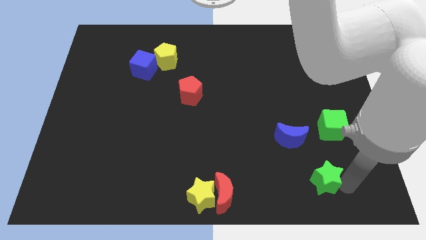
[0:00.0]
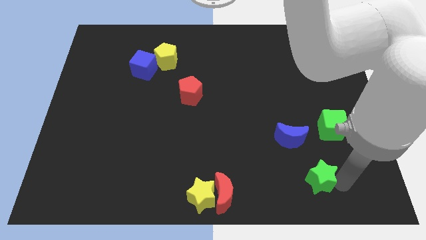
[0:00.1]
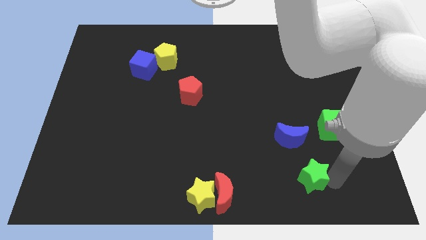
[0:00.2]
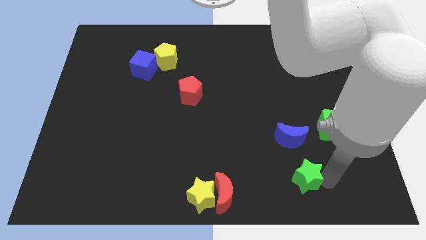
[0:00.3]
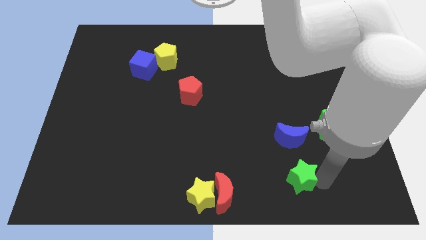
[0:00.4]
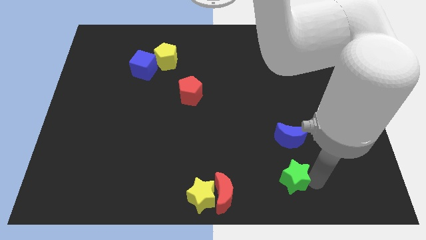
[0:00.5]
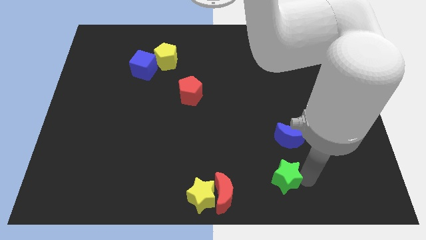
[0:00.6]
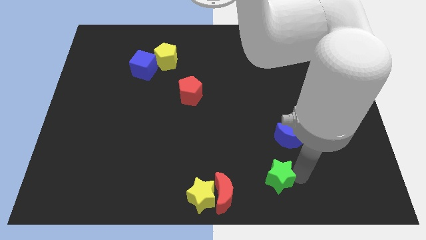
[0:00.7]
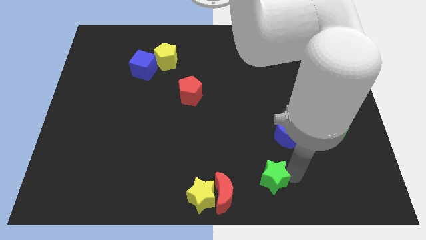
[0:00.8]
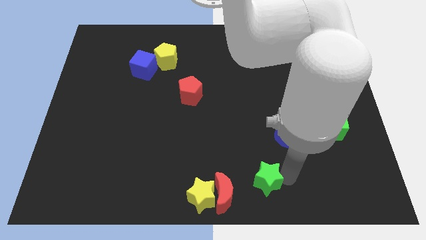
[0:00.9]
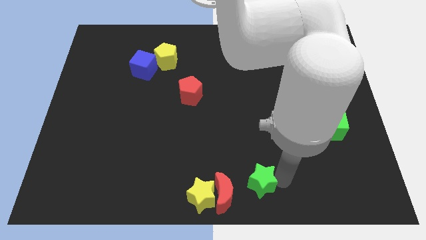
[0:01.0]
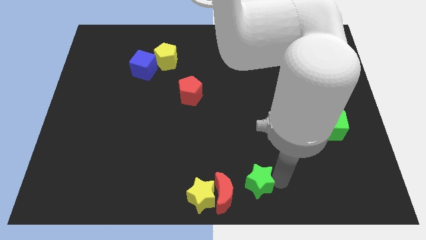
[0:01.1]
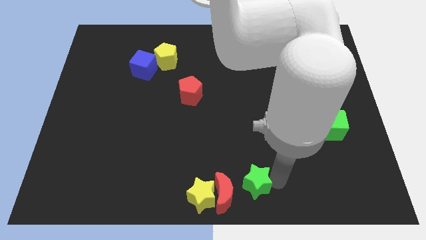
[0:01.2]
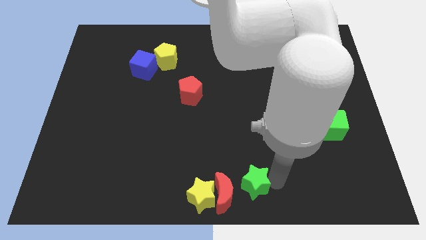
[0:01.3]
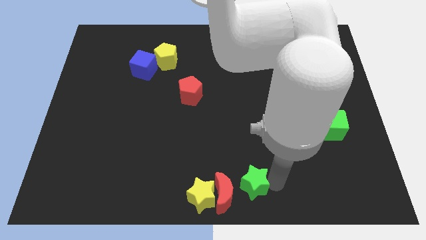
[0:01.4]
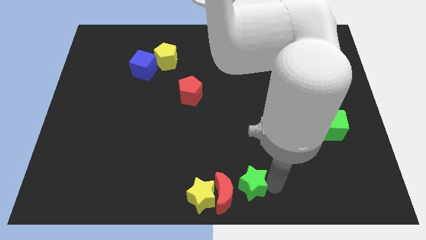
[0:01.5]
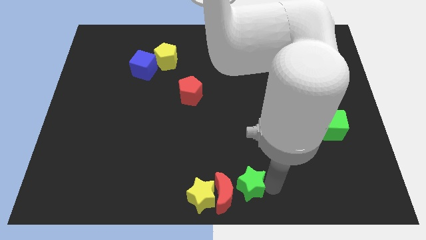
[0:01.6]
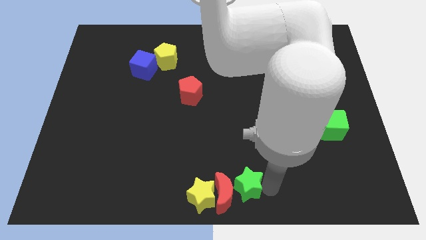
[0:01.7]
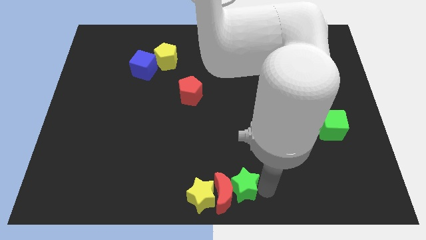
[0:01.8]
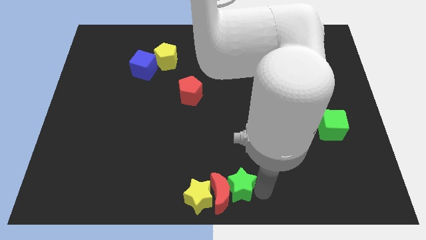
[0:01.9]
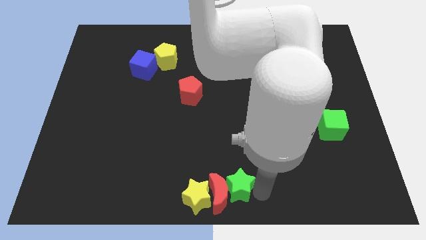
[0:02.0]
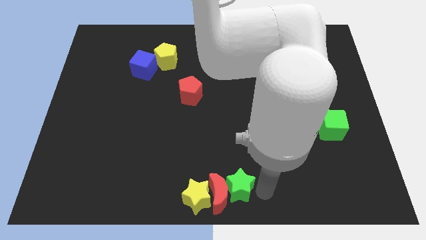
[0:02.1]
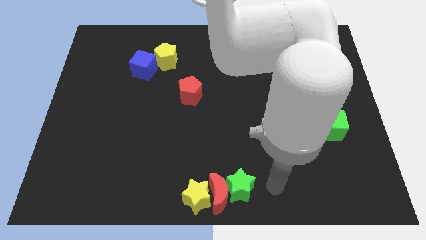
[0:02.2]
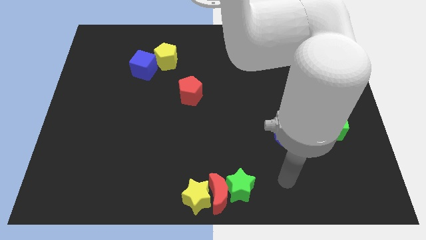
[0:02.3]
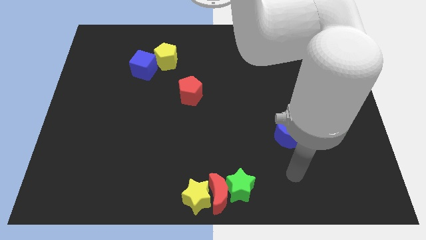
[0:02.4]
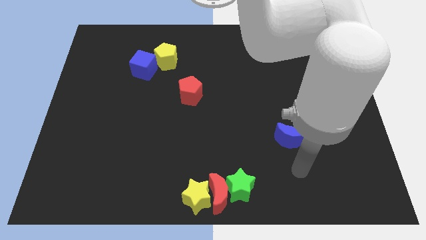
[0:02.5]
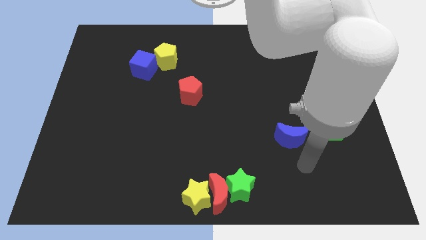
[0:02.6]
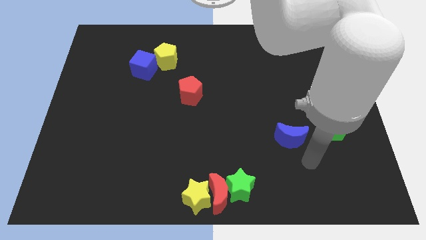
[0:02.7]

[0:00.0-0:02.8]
push the green star right to the red moon

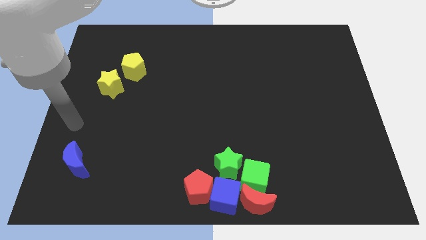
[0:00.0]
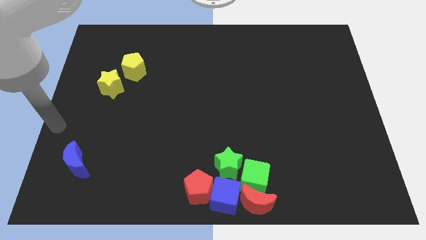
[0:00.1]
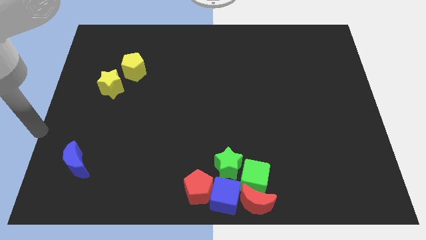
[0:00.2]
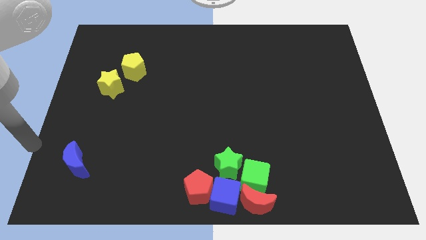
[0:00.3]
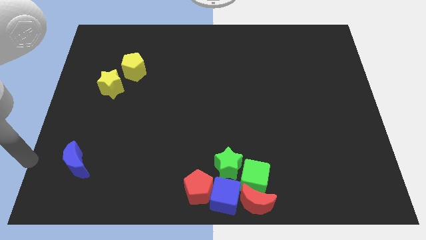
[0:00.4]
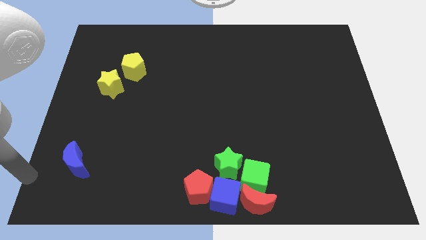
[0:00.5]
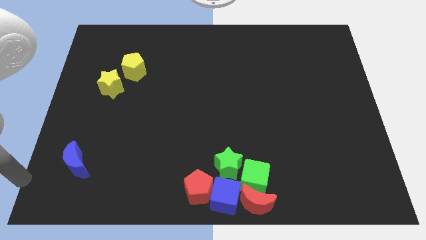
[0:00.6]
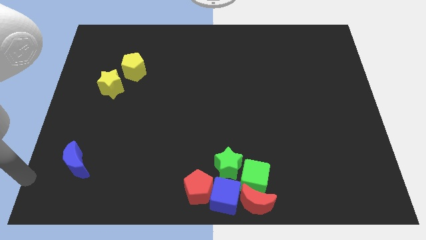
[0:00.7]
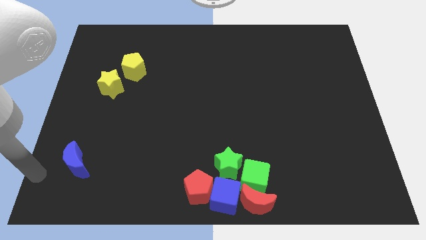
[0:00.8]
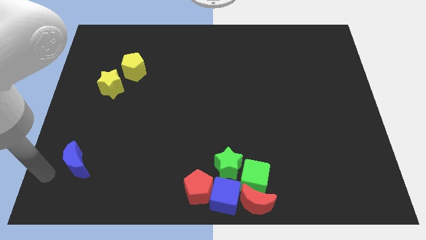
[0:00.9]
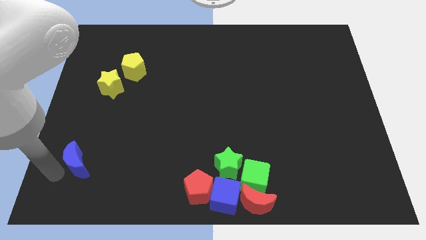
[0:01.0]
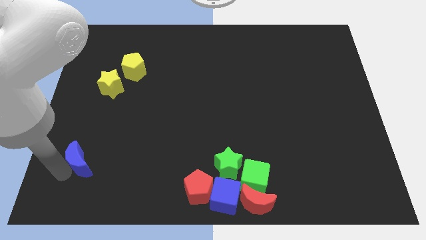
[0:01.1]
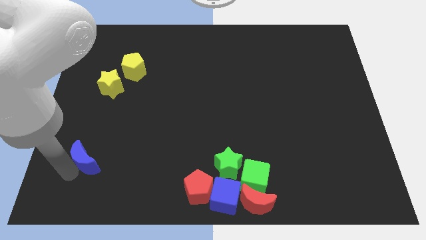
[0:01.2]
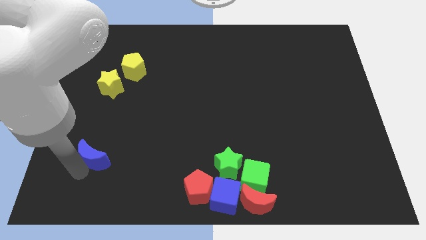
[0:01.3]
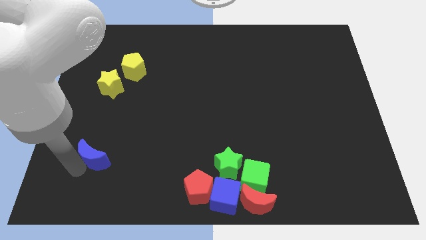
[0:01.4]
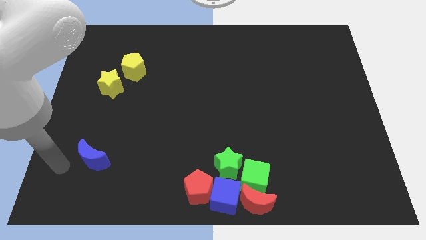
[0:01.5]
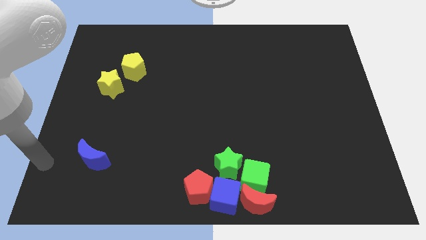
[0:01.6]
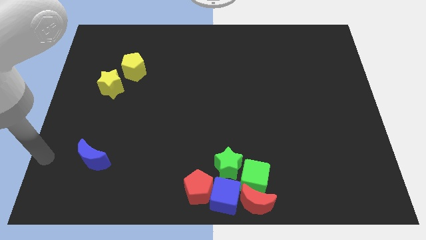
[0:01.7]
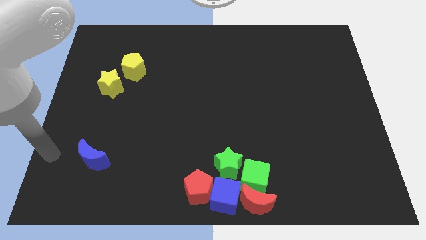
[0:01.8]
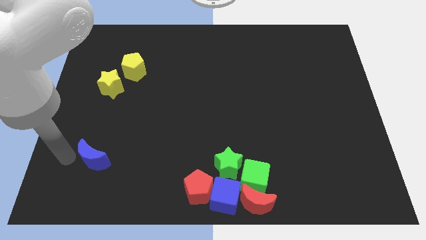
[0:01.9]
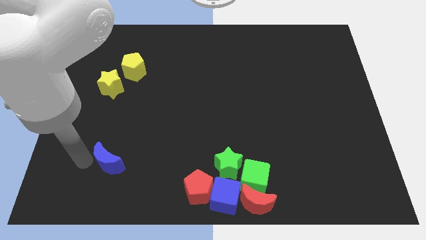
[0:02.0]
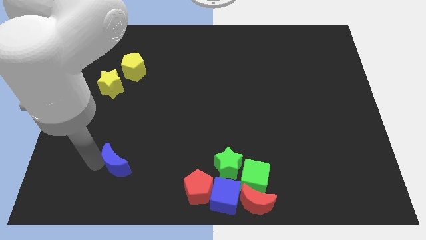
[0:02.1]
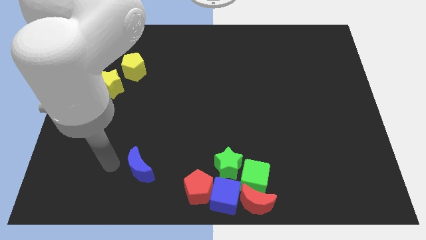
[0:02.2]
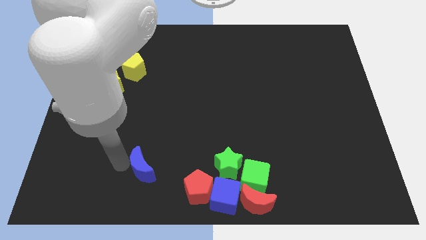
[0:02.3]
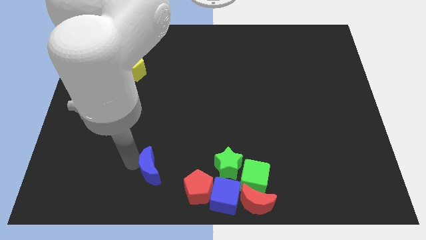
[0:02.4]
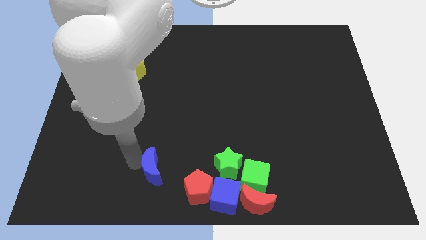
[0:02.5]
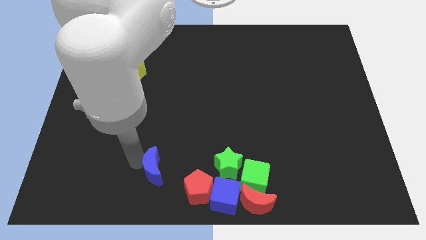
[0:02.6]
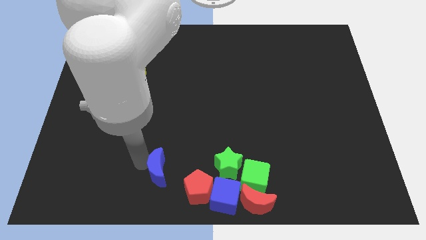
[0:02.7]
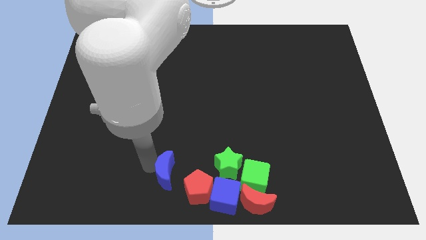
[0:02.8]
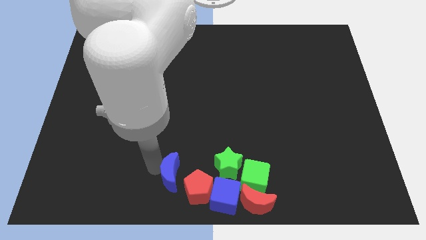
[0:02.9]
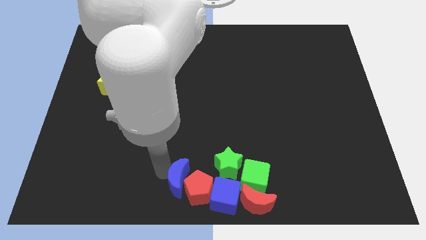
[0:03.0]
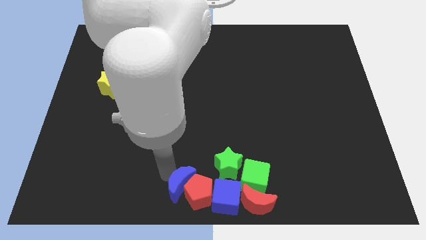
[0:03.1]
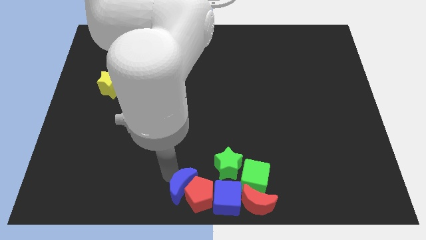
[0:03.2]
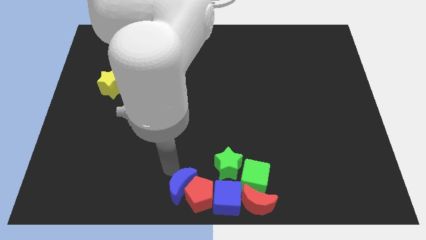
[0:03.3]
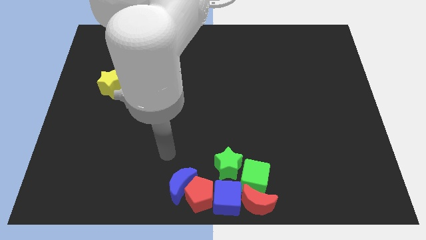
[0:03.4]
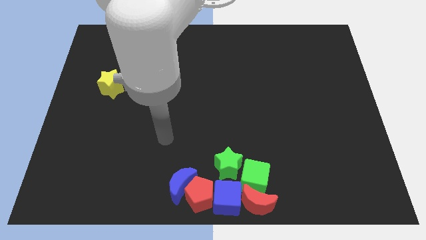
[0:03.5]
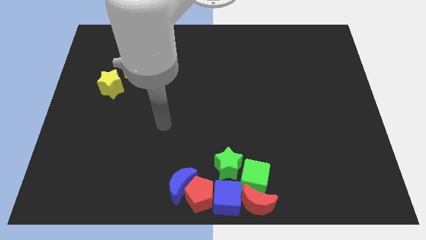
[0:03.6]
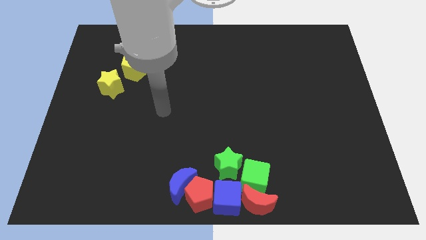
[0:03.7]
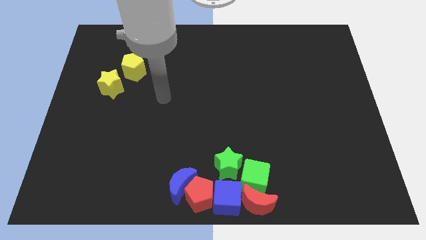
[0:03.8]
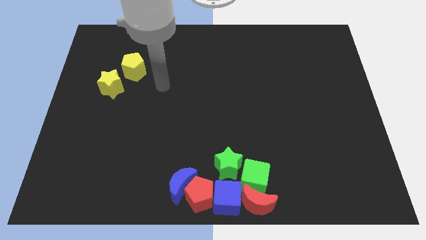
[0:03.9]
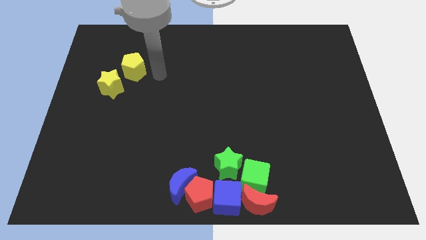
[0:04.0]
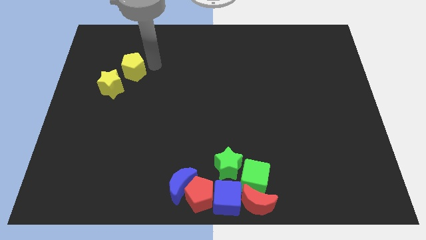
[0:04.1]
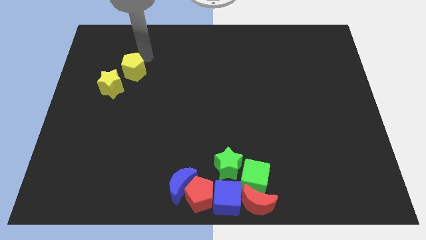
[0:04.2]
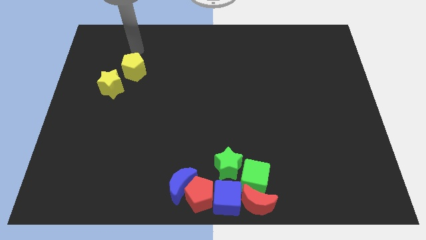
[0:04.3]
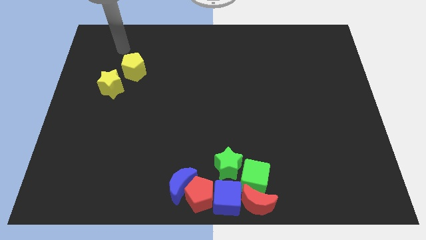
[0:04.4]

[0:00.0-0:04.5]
move the blue moon to the red pentagon

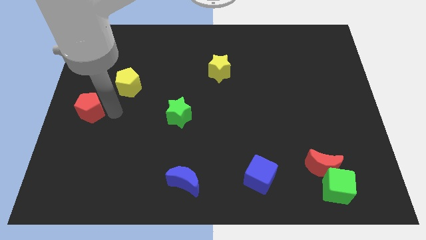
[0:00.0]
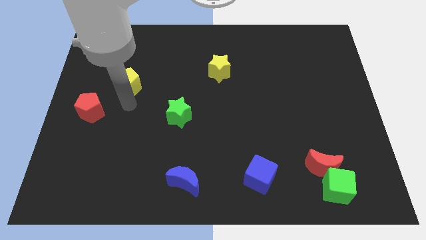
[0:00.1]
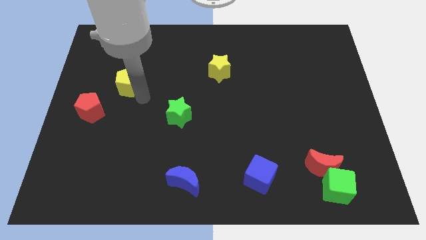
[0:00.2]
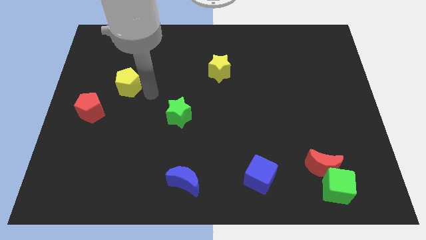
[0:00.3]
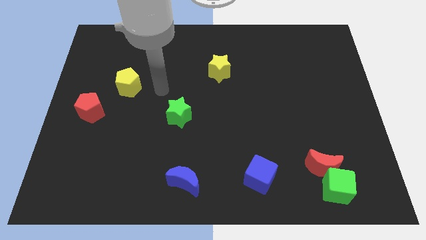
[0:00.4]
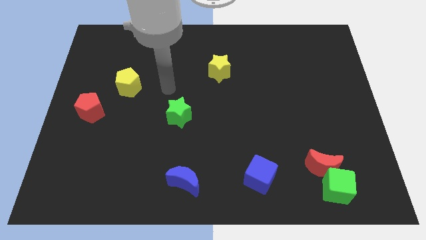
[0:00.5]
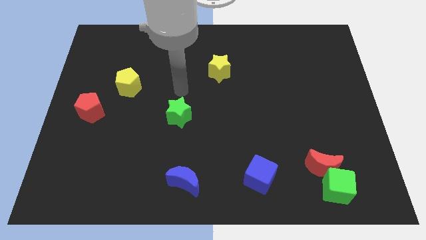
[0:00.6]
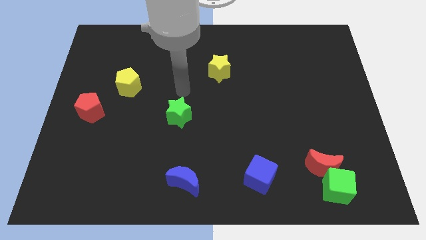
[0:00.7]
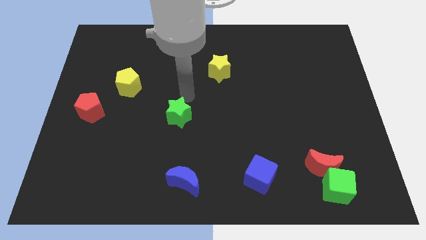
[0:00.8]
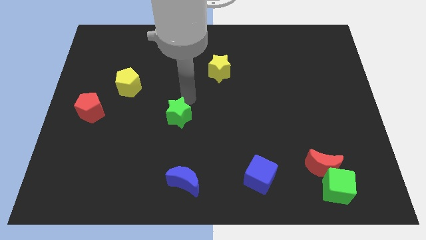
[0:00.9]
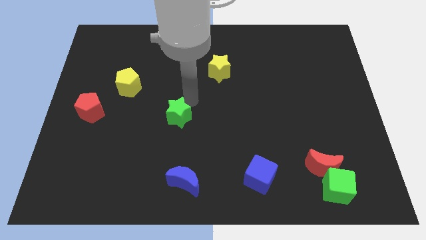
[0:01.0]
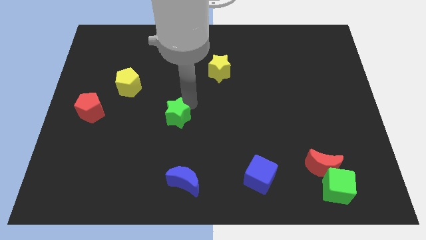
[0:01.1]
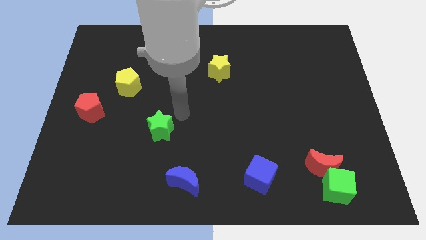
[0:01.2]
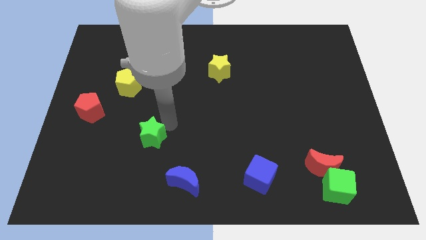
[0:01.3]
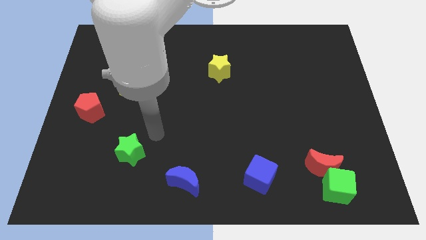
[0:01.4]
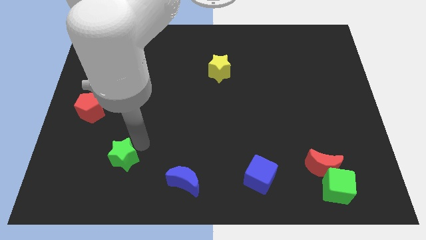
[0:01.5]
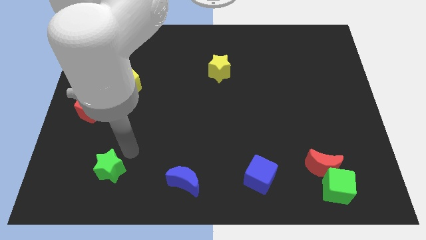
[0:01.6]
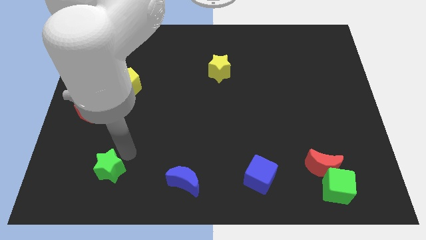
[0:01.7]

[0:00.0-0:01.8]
push the green star towards bottom left side of the board
